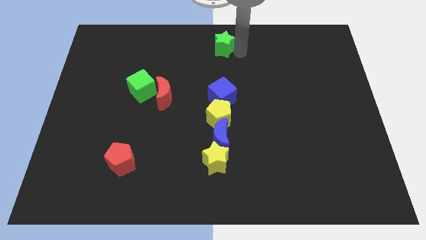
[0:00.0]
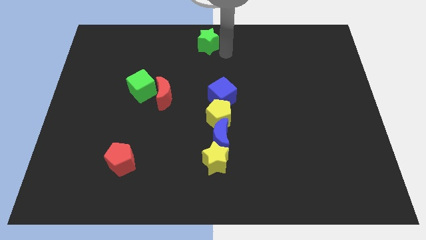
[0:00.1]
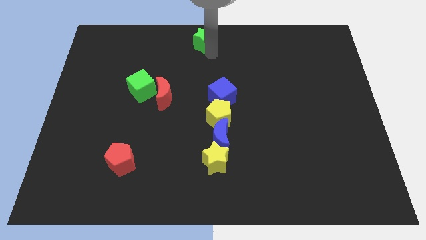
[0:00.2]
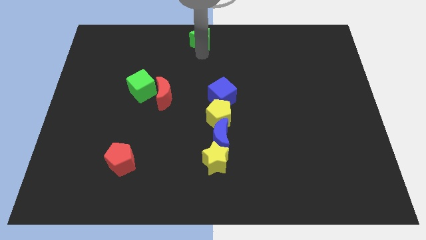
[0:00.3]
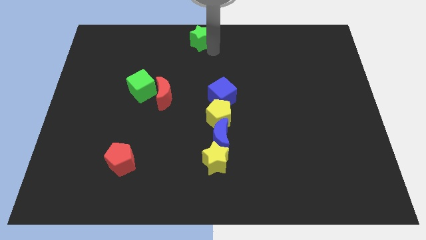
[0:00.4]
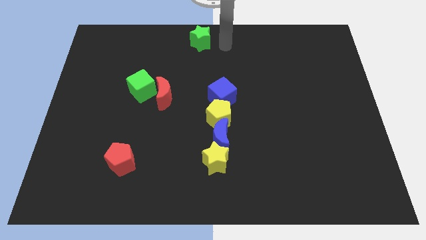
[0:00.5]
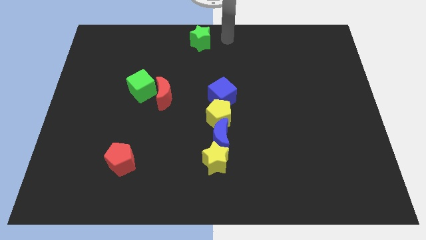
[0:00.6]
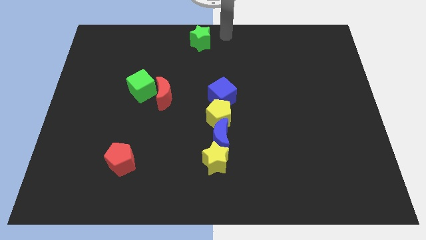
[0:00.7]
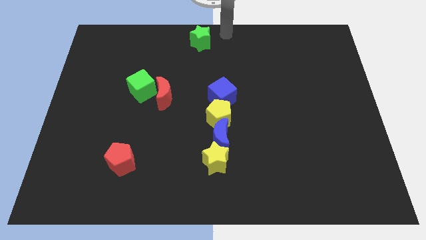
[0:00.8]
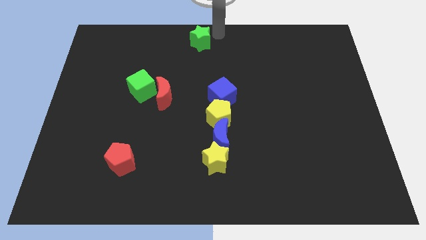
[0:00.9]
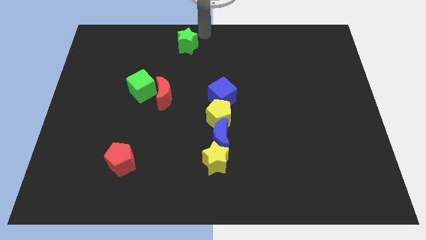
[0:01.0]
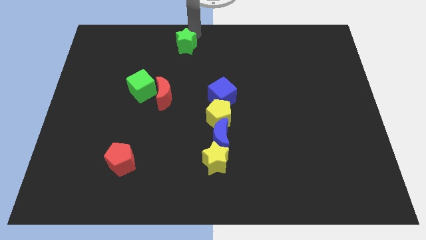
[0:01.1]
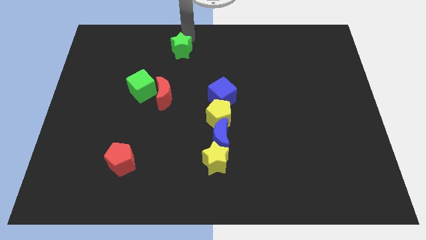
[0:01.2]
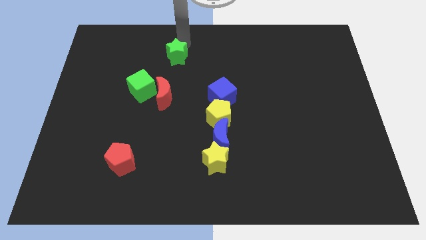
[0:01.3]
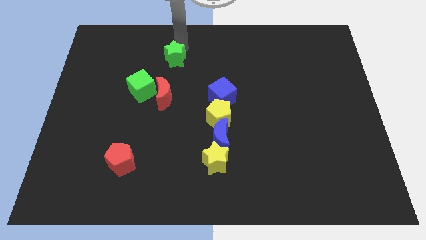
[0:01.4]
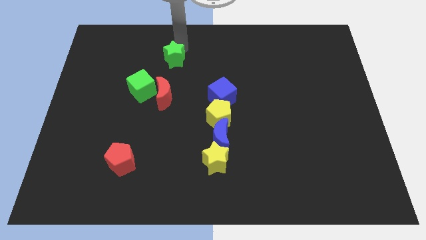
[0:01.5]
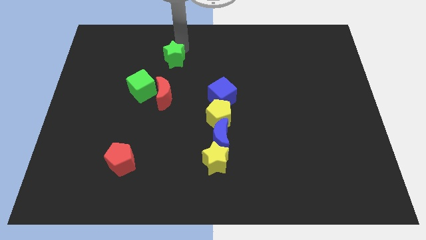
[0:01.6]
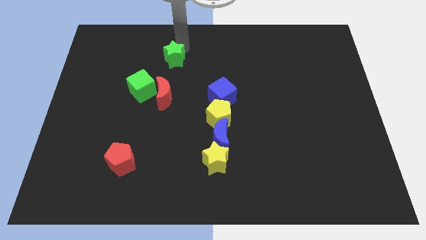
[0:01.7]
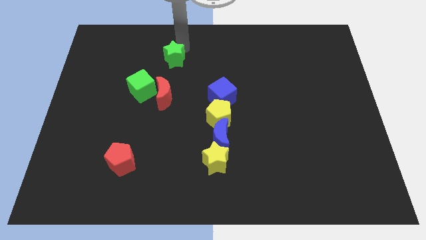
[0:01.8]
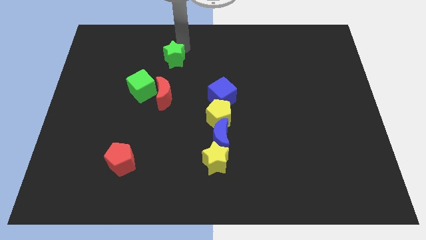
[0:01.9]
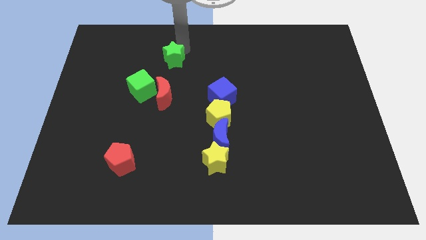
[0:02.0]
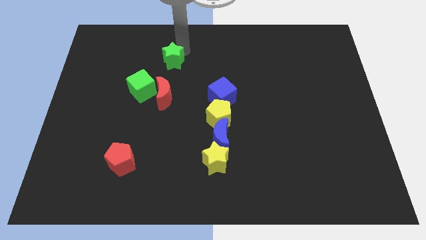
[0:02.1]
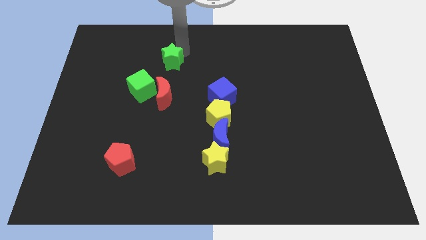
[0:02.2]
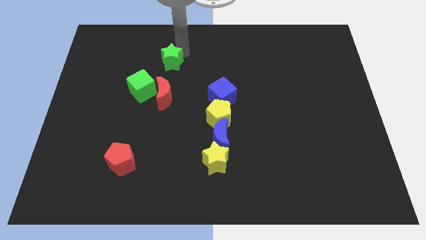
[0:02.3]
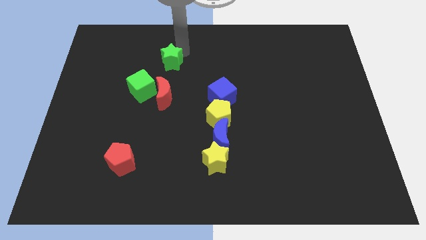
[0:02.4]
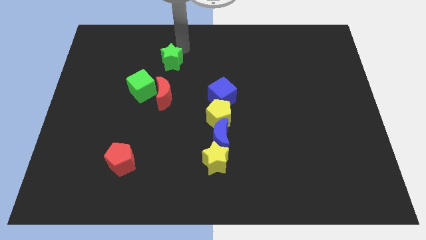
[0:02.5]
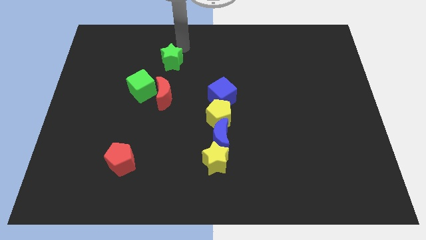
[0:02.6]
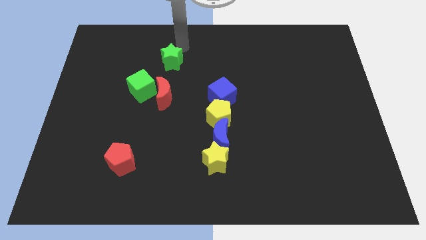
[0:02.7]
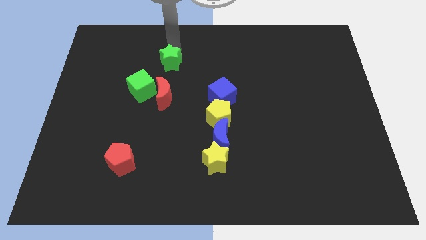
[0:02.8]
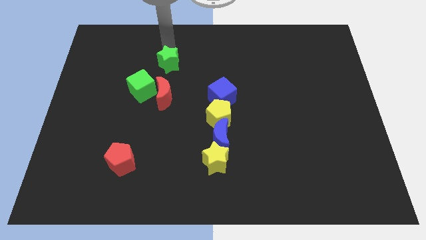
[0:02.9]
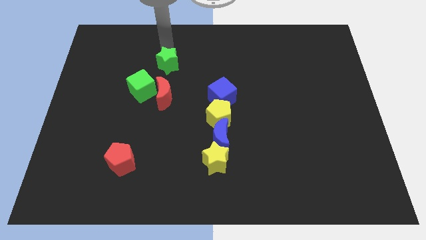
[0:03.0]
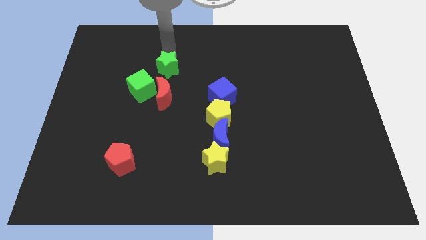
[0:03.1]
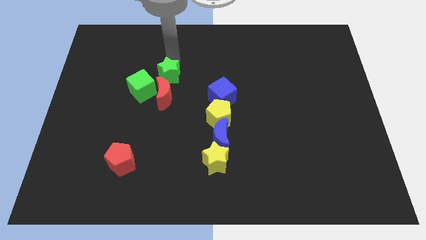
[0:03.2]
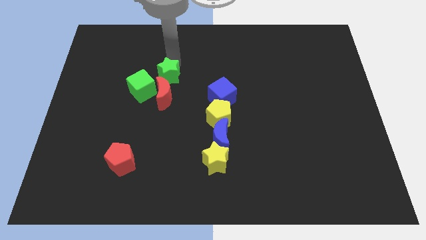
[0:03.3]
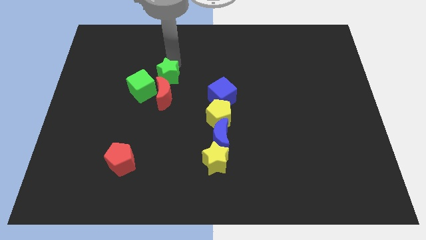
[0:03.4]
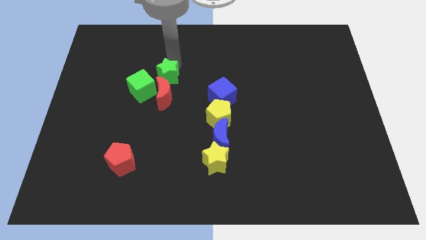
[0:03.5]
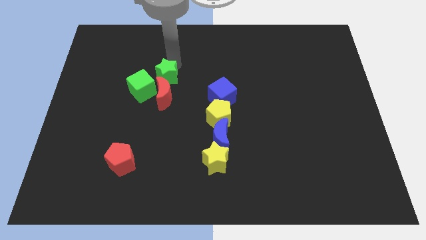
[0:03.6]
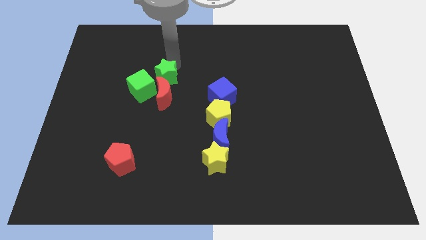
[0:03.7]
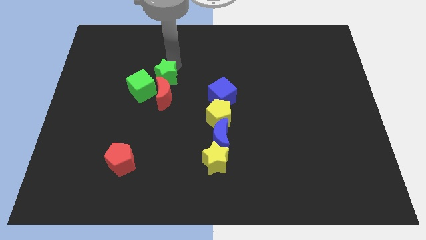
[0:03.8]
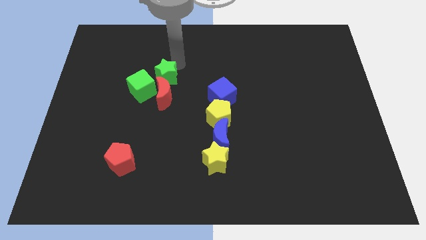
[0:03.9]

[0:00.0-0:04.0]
push the green star to the top side of the red moon

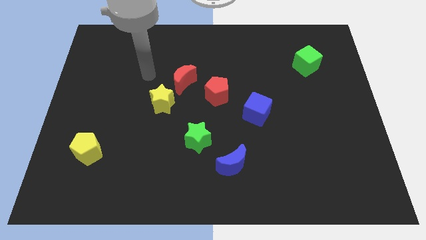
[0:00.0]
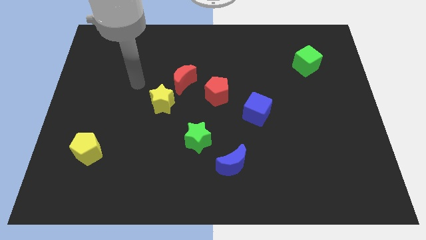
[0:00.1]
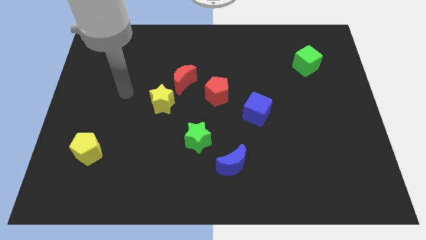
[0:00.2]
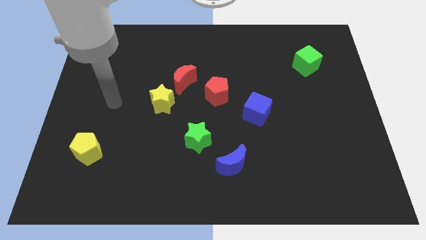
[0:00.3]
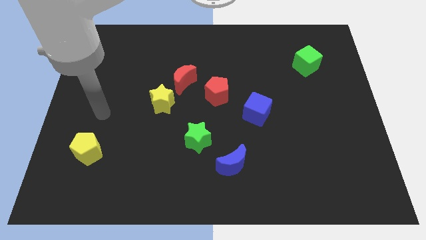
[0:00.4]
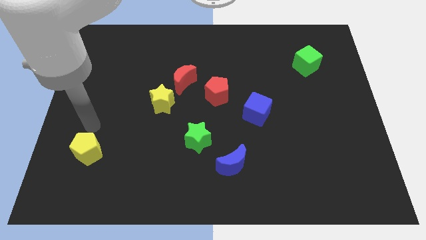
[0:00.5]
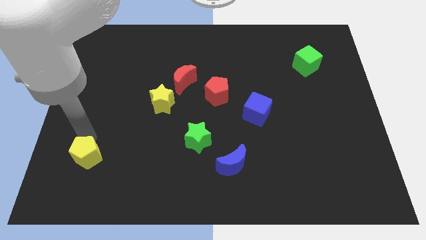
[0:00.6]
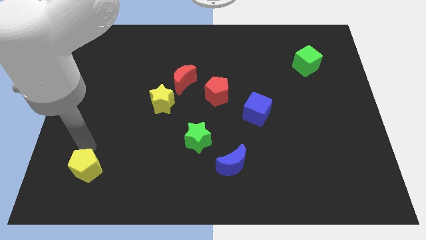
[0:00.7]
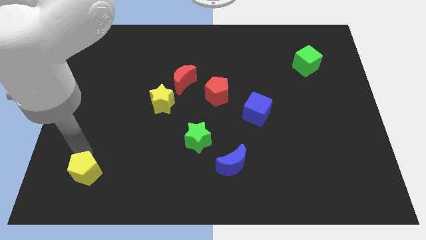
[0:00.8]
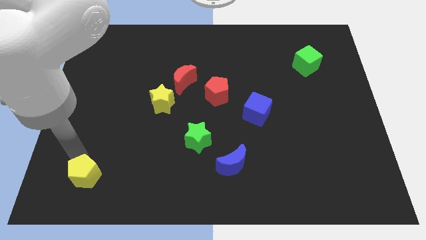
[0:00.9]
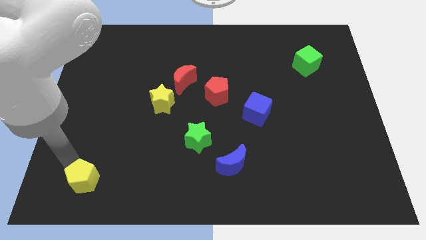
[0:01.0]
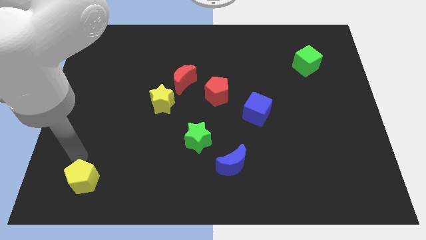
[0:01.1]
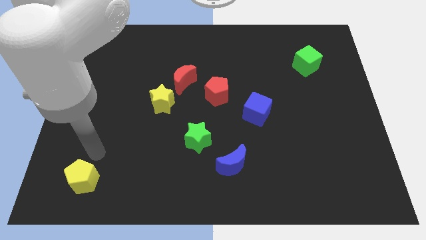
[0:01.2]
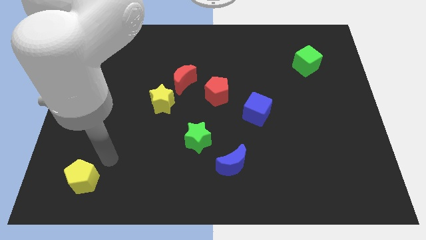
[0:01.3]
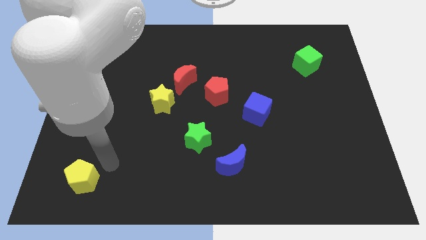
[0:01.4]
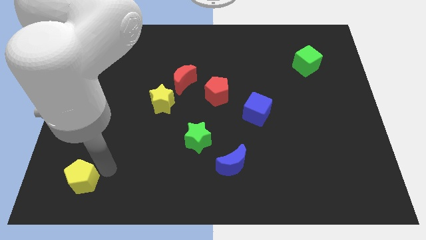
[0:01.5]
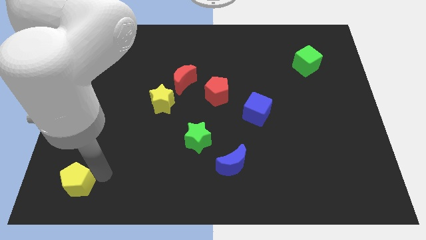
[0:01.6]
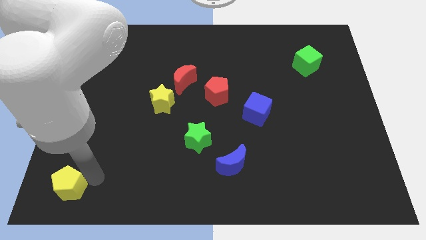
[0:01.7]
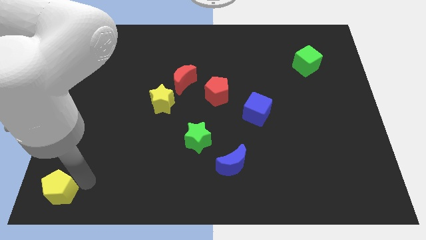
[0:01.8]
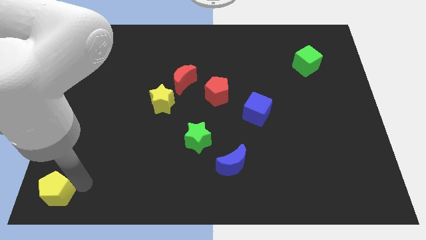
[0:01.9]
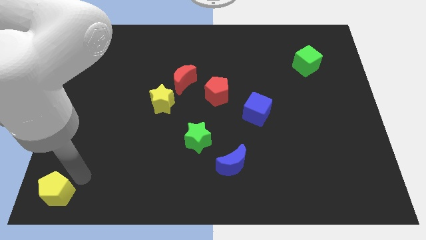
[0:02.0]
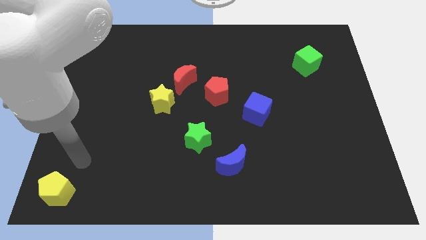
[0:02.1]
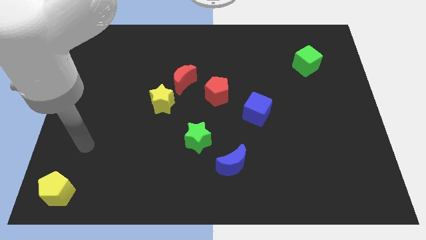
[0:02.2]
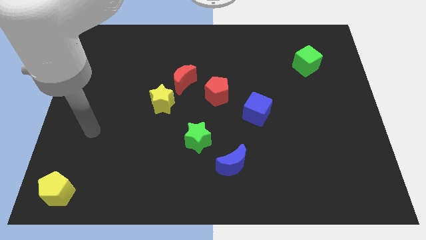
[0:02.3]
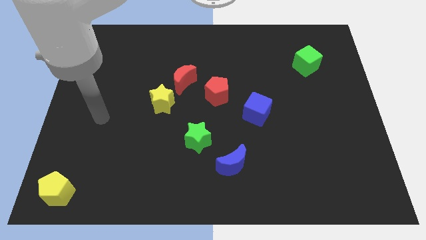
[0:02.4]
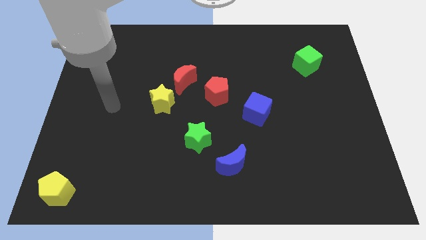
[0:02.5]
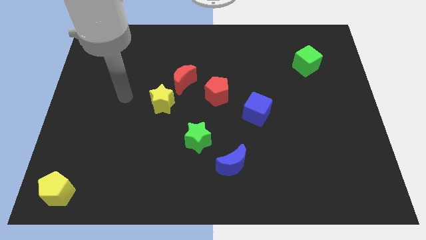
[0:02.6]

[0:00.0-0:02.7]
slide the yellow pentagon to the bottom left corner

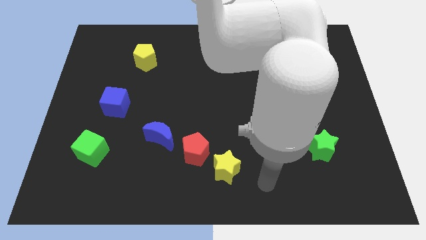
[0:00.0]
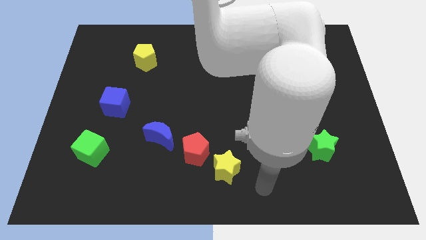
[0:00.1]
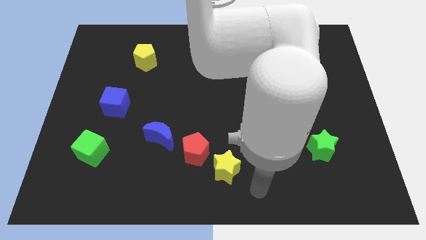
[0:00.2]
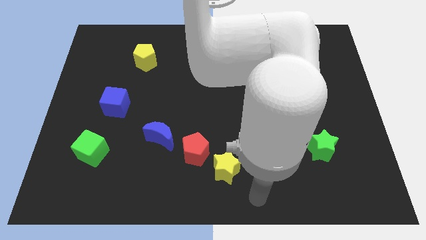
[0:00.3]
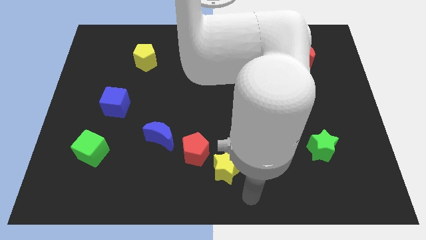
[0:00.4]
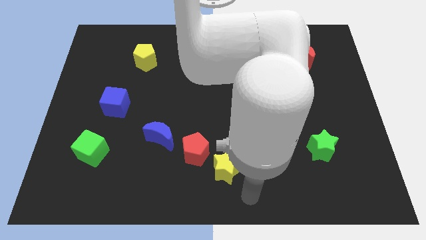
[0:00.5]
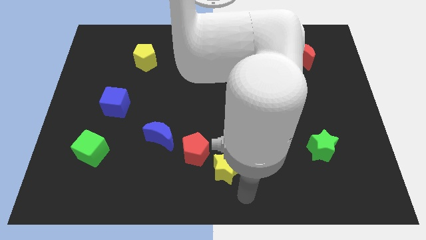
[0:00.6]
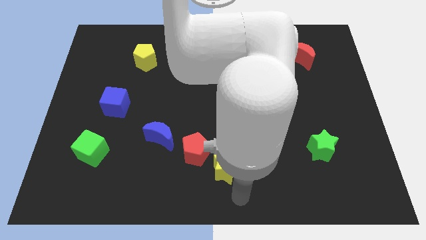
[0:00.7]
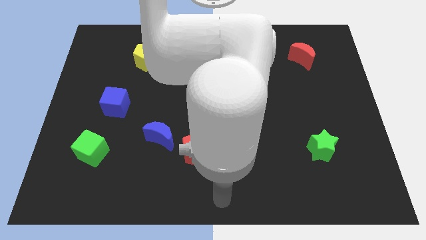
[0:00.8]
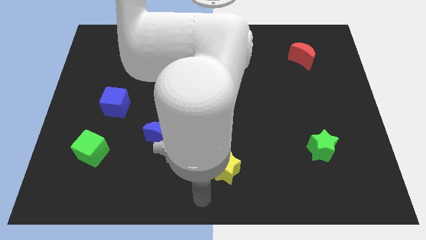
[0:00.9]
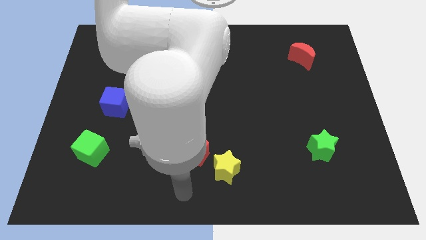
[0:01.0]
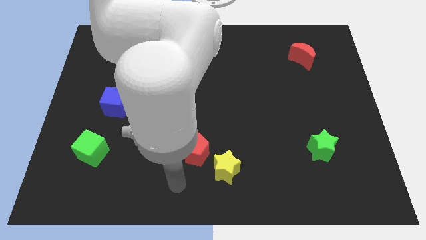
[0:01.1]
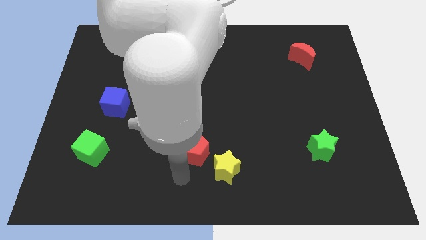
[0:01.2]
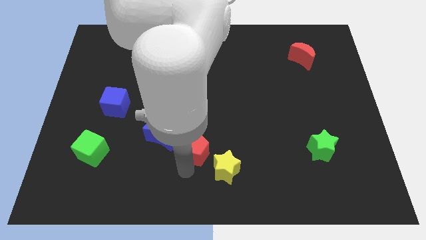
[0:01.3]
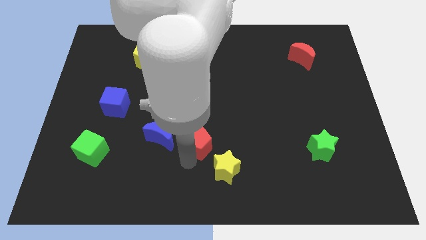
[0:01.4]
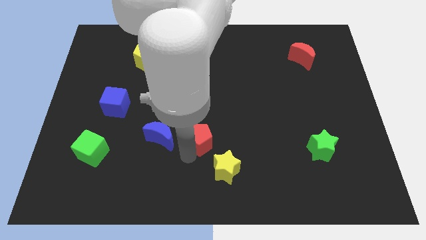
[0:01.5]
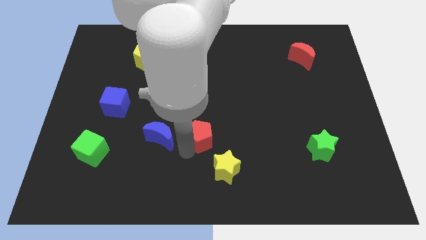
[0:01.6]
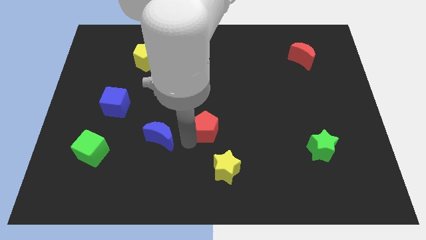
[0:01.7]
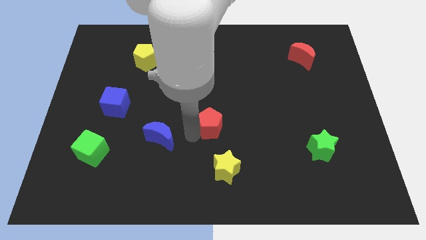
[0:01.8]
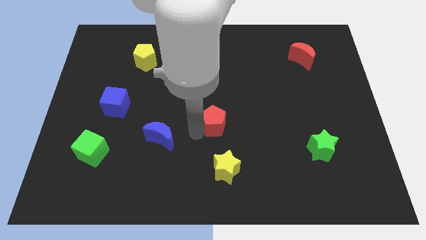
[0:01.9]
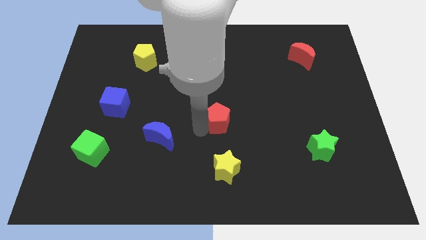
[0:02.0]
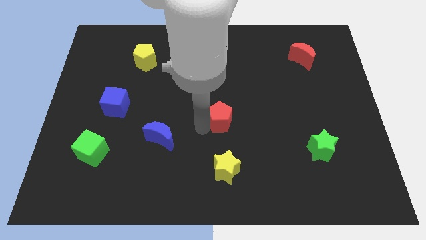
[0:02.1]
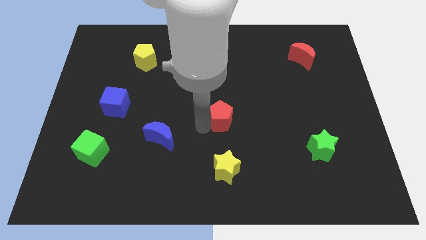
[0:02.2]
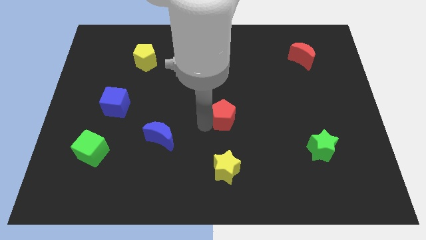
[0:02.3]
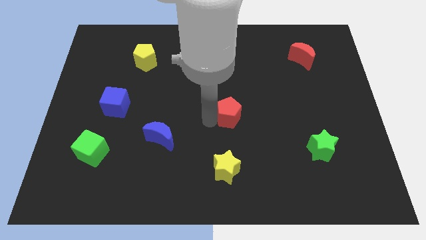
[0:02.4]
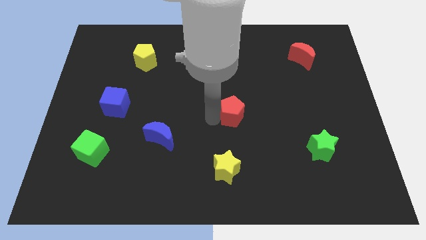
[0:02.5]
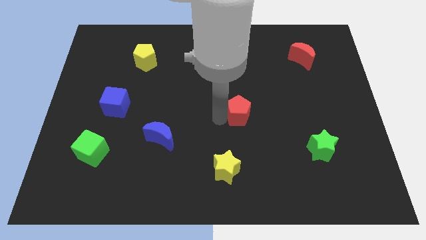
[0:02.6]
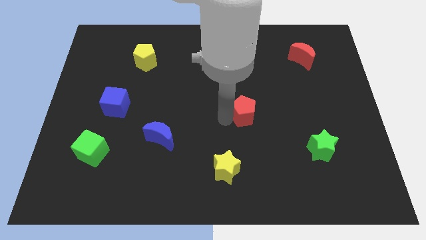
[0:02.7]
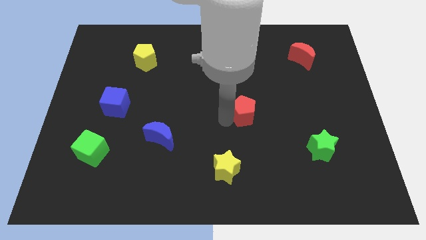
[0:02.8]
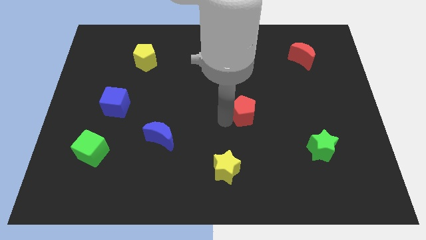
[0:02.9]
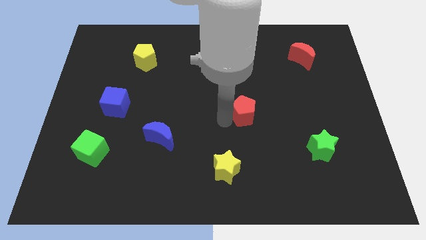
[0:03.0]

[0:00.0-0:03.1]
slide red pentagon to the top right of yellow star
